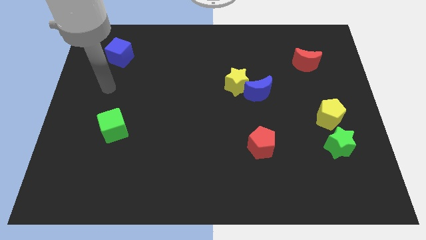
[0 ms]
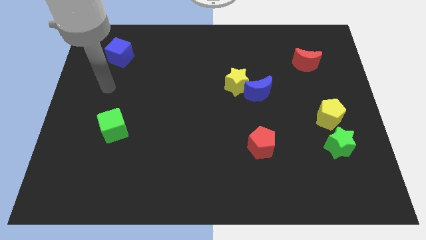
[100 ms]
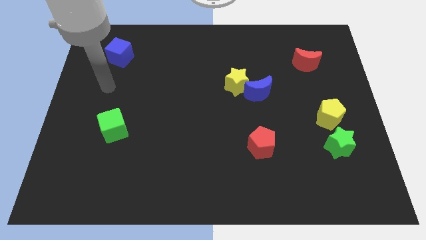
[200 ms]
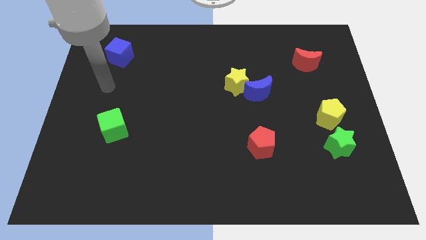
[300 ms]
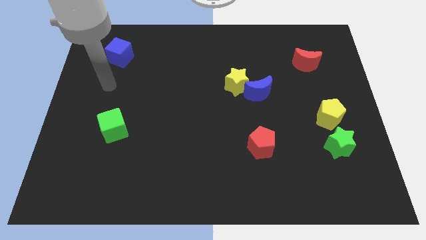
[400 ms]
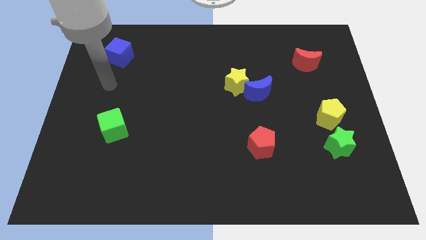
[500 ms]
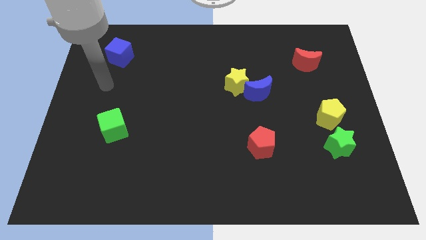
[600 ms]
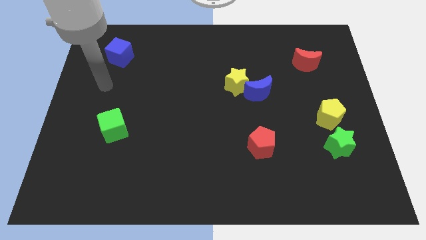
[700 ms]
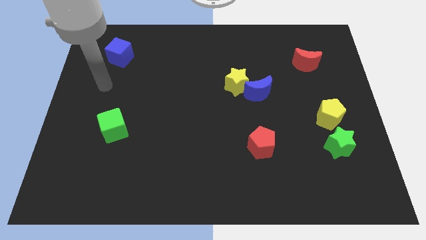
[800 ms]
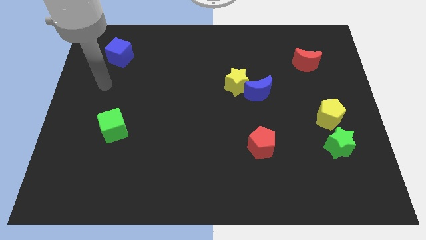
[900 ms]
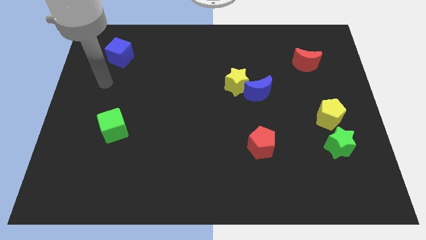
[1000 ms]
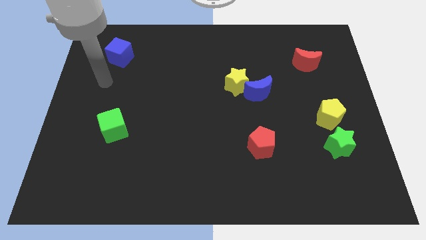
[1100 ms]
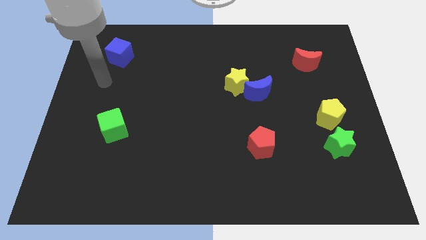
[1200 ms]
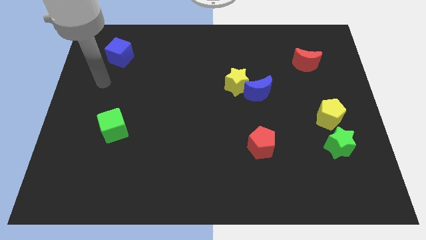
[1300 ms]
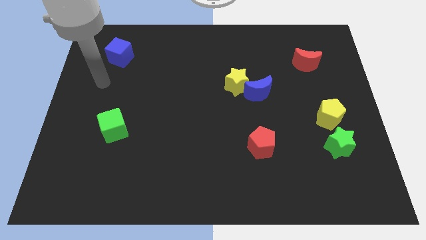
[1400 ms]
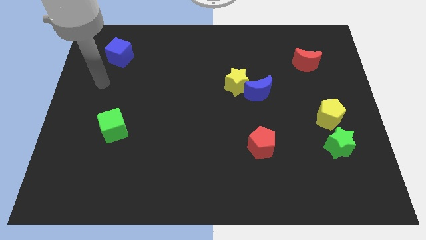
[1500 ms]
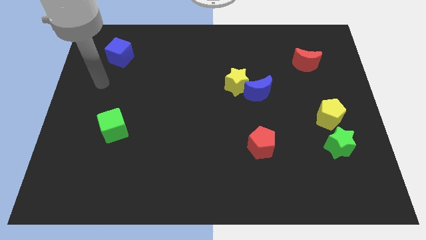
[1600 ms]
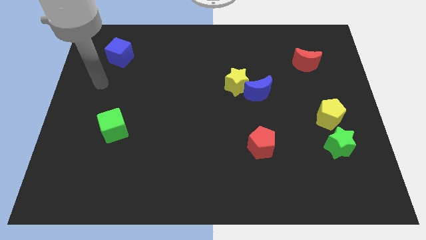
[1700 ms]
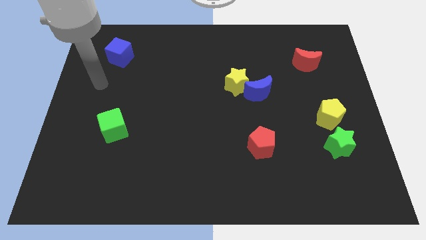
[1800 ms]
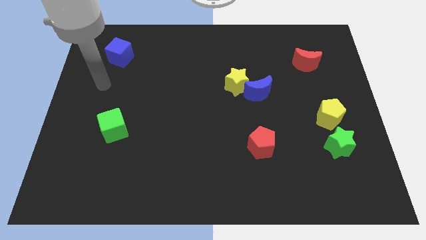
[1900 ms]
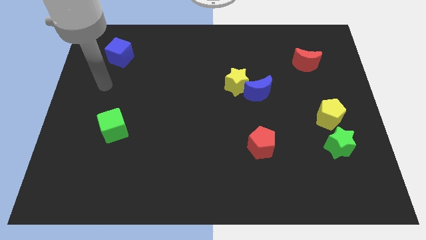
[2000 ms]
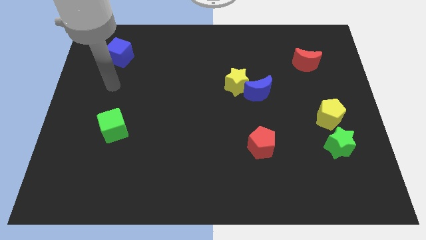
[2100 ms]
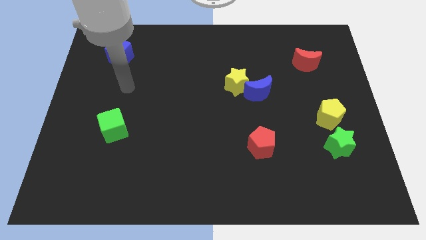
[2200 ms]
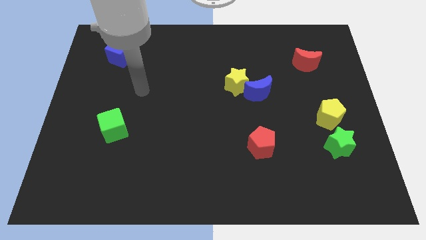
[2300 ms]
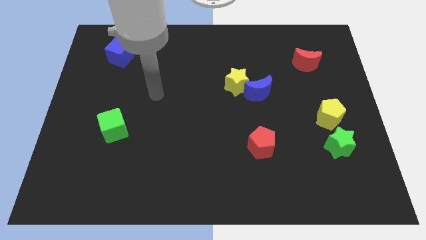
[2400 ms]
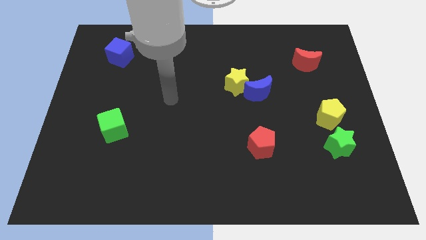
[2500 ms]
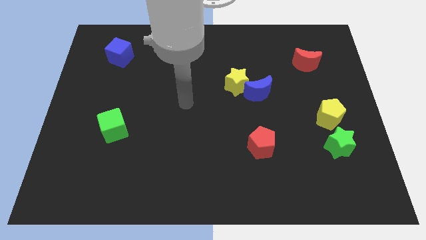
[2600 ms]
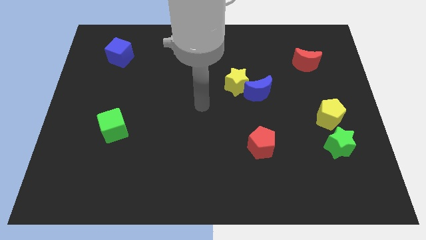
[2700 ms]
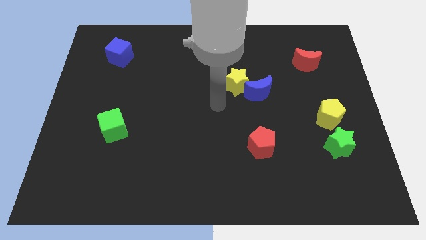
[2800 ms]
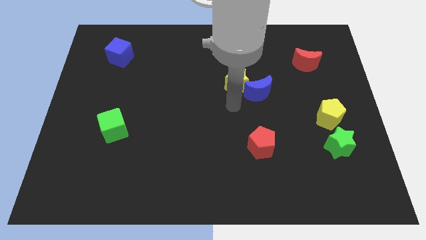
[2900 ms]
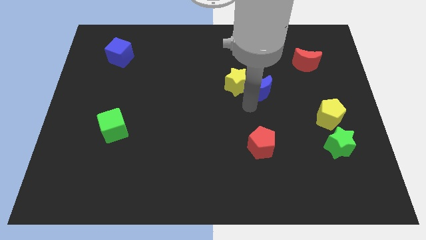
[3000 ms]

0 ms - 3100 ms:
place your hand close to the blue crecsent

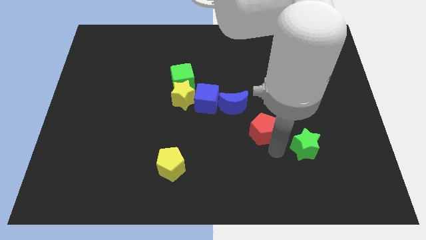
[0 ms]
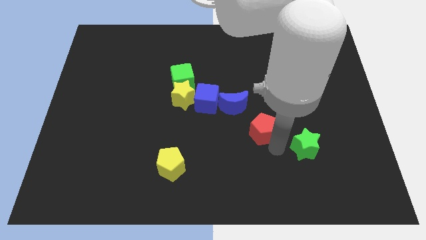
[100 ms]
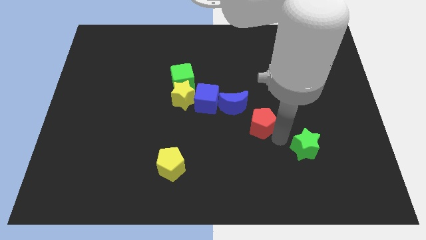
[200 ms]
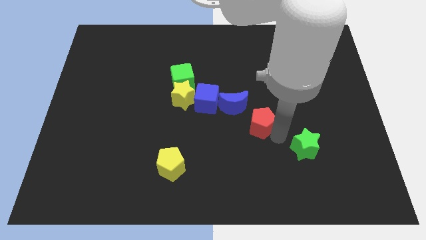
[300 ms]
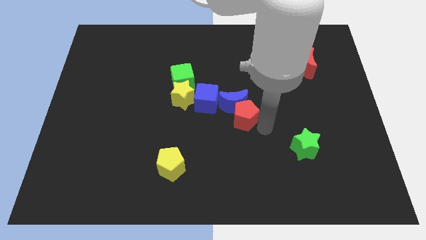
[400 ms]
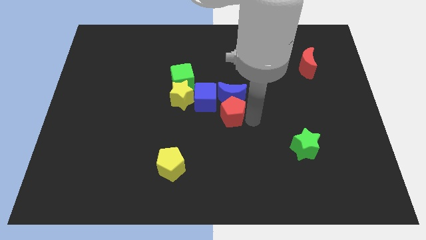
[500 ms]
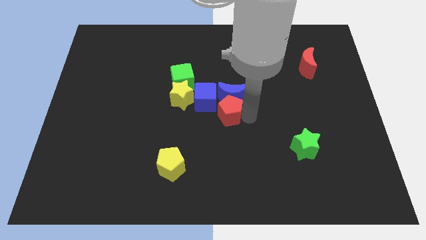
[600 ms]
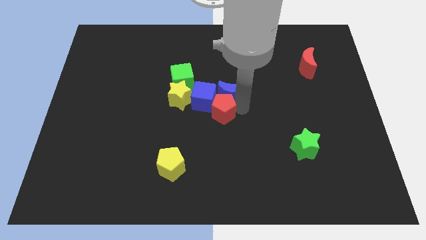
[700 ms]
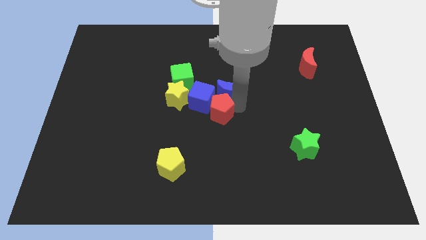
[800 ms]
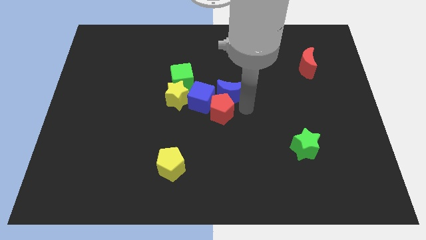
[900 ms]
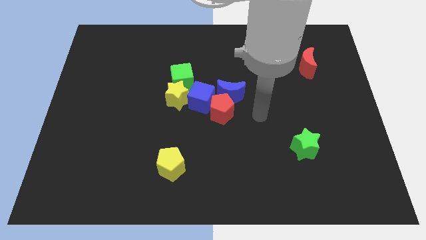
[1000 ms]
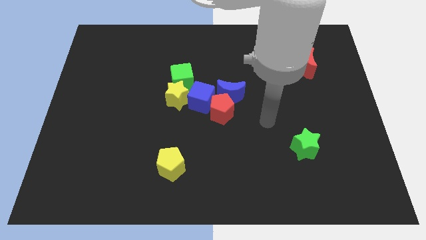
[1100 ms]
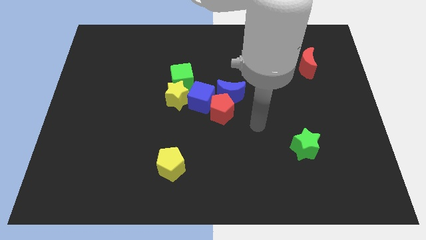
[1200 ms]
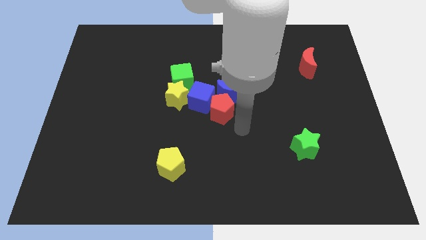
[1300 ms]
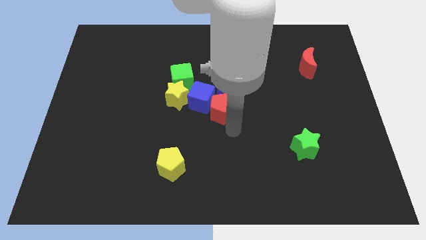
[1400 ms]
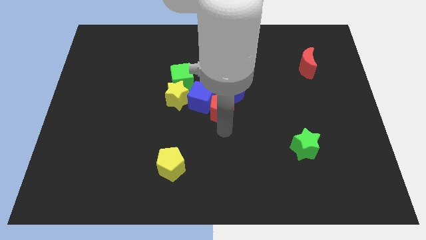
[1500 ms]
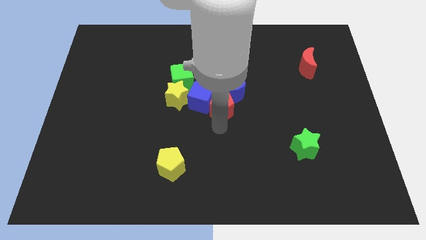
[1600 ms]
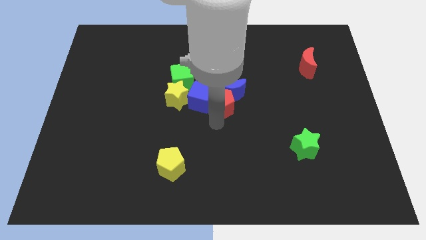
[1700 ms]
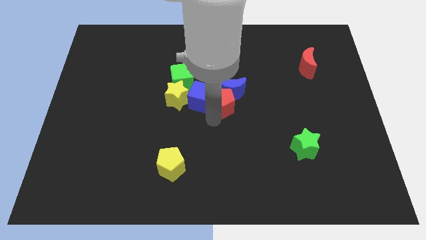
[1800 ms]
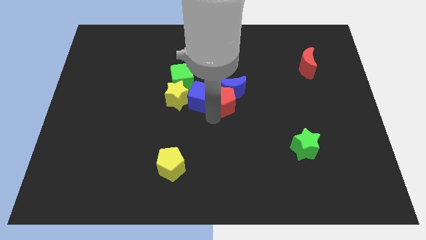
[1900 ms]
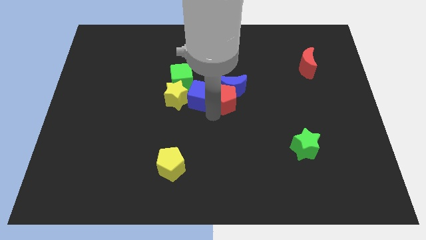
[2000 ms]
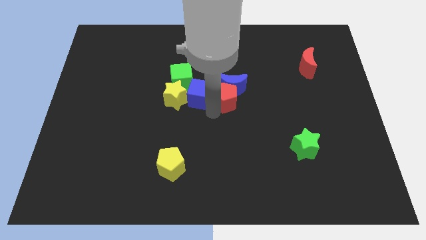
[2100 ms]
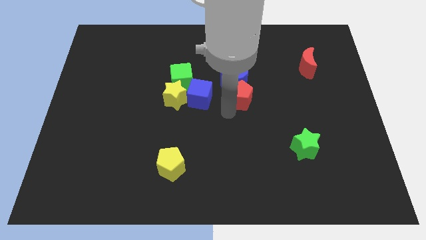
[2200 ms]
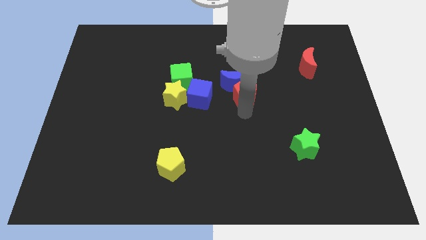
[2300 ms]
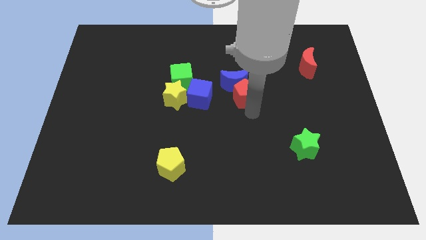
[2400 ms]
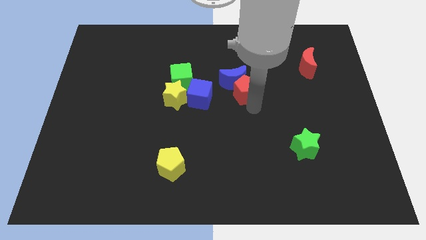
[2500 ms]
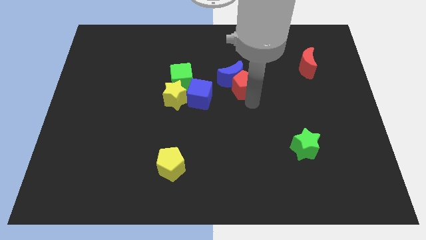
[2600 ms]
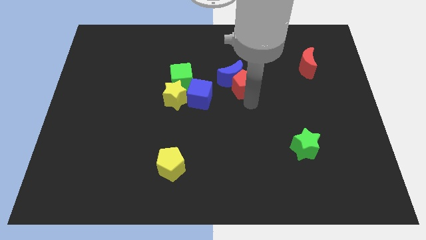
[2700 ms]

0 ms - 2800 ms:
push red pentagon into blue crescent

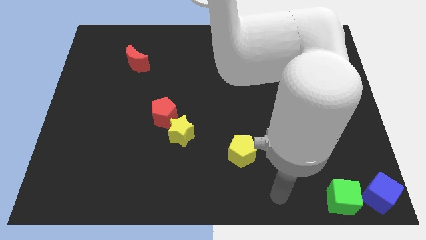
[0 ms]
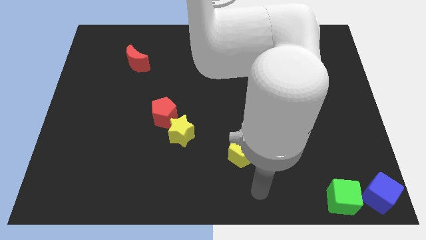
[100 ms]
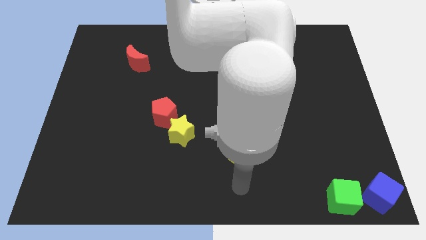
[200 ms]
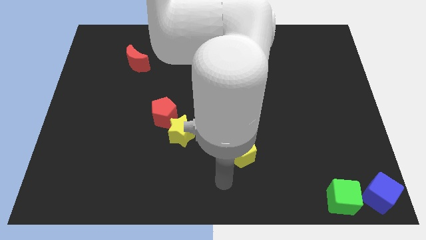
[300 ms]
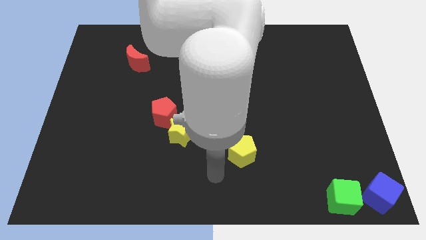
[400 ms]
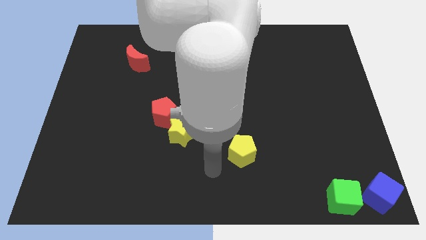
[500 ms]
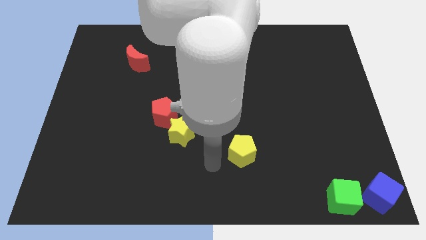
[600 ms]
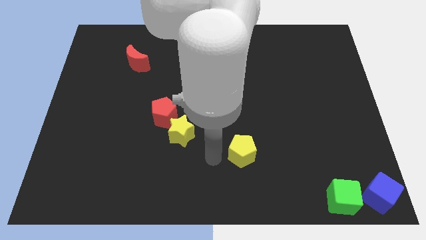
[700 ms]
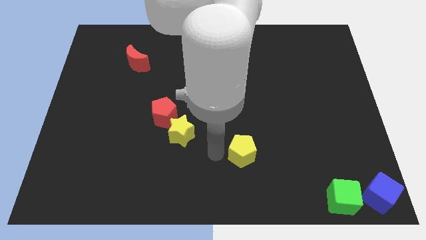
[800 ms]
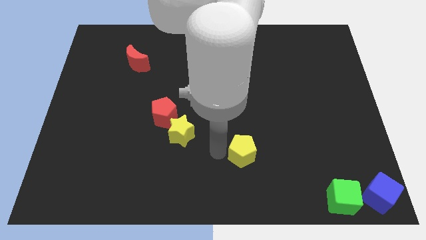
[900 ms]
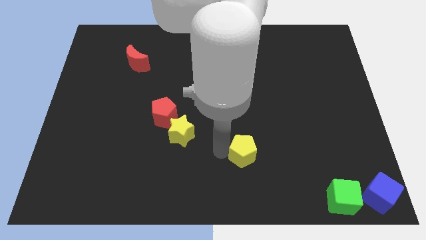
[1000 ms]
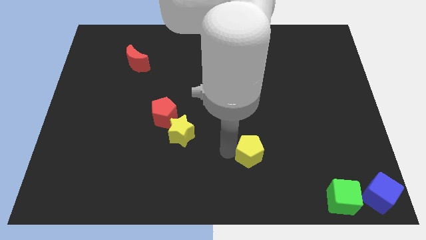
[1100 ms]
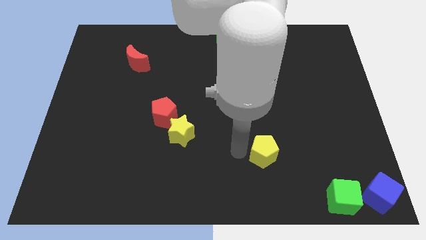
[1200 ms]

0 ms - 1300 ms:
move the arm to the yellow pentagon

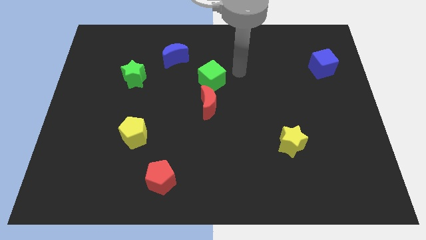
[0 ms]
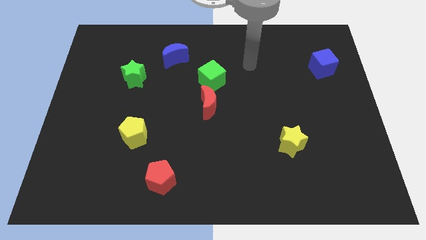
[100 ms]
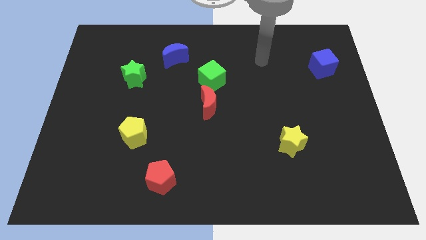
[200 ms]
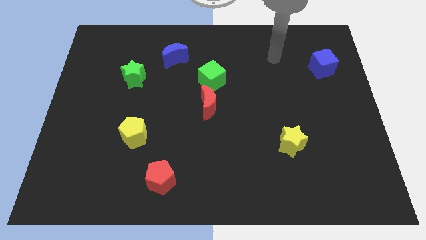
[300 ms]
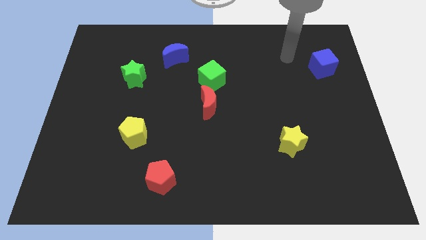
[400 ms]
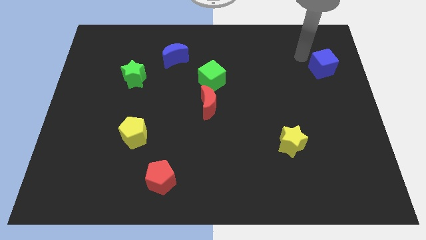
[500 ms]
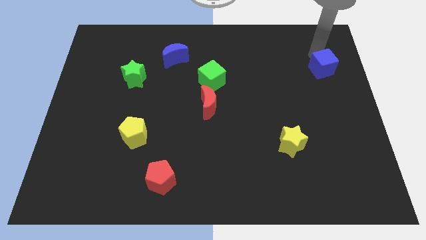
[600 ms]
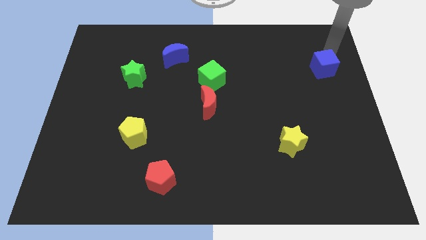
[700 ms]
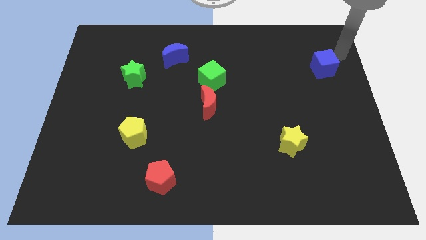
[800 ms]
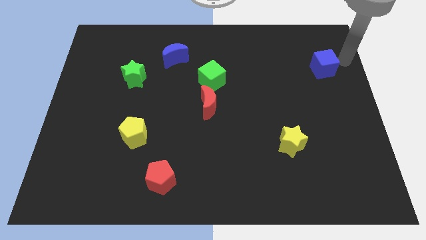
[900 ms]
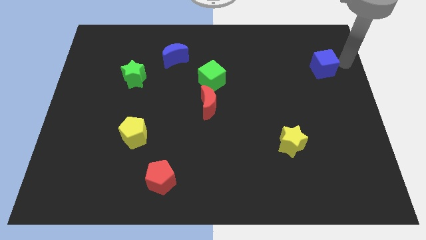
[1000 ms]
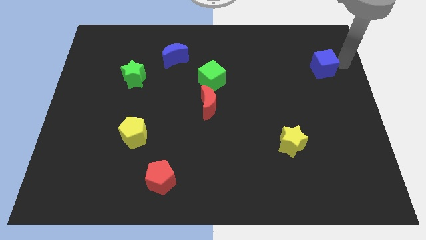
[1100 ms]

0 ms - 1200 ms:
move your arm towards the blue cube

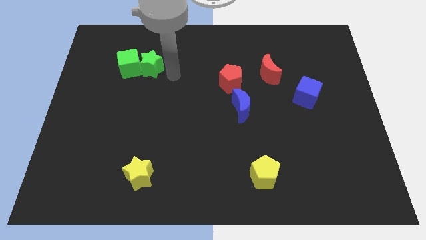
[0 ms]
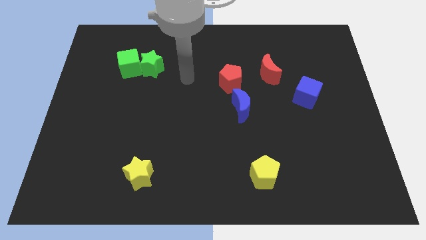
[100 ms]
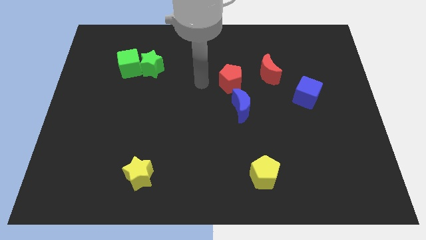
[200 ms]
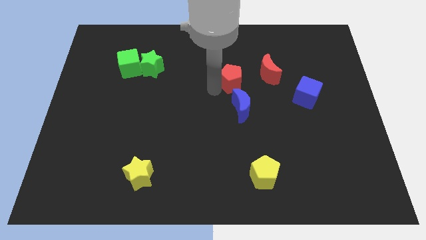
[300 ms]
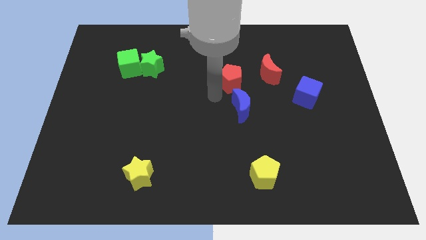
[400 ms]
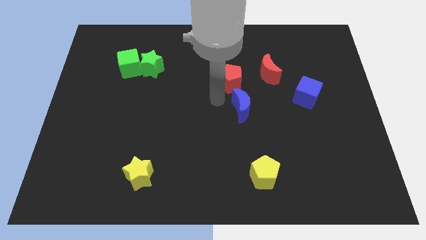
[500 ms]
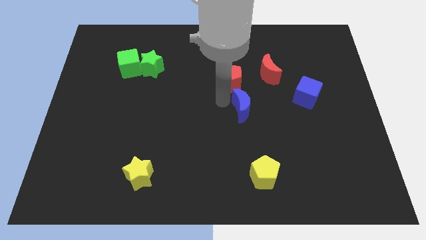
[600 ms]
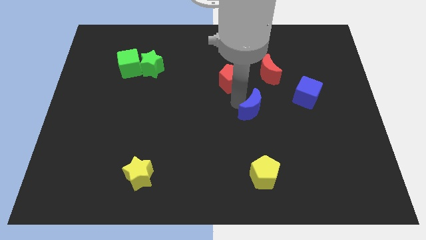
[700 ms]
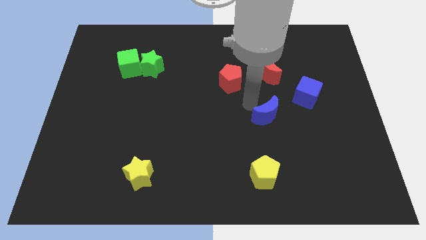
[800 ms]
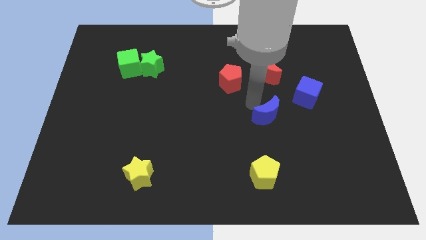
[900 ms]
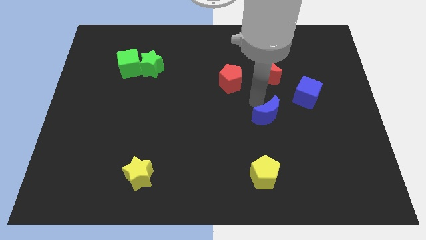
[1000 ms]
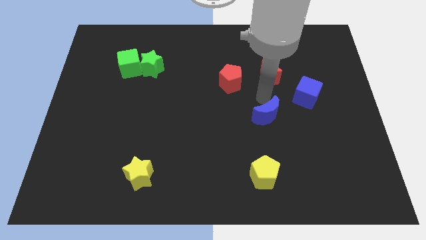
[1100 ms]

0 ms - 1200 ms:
push the blue crescent towards the bottom of the board
